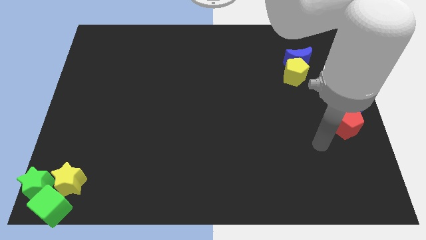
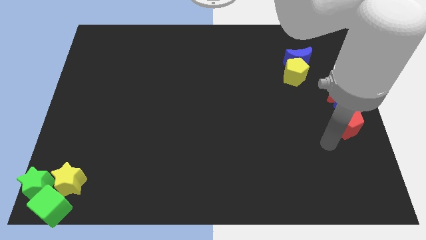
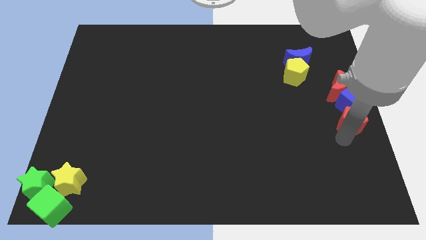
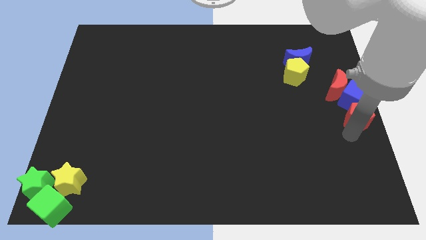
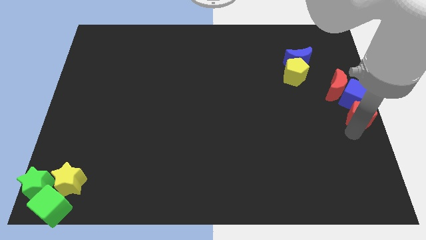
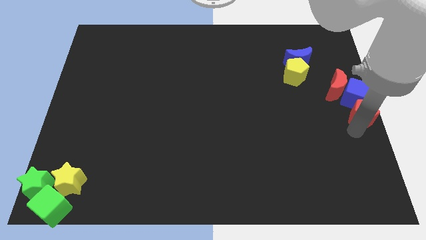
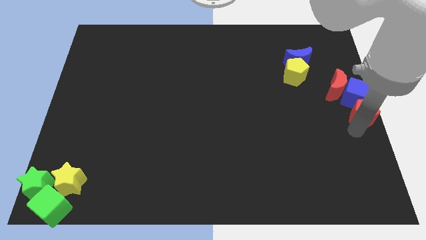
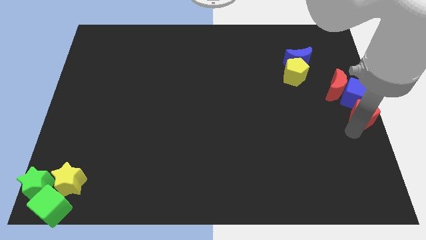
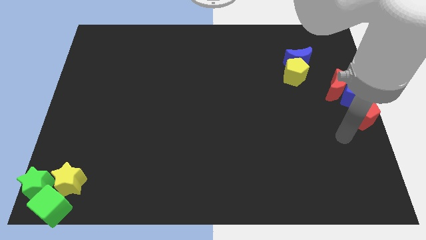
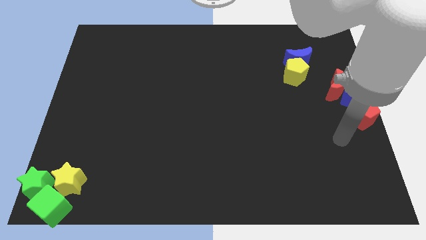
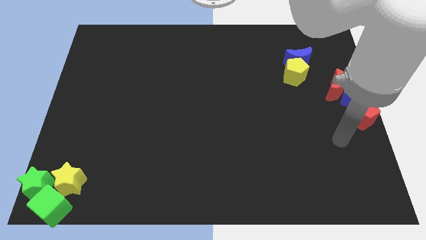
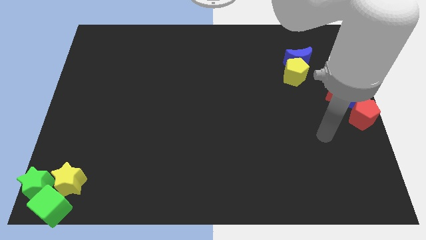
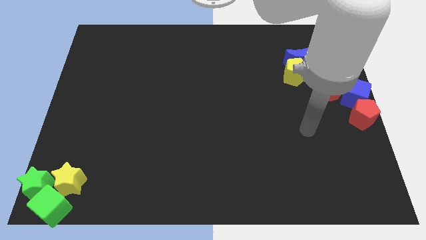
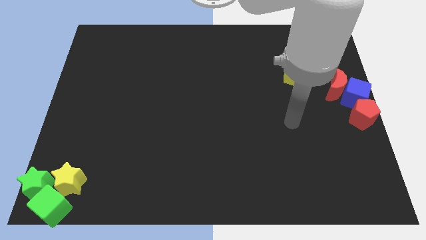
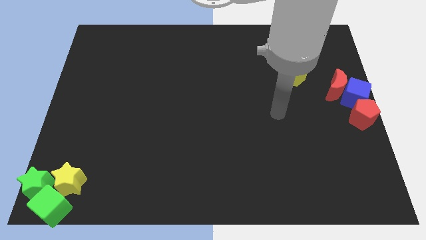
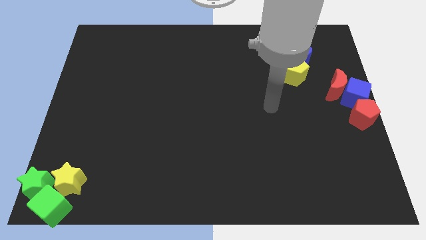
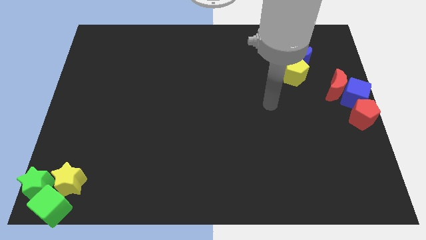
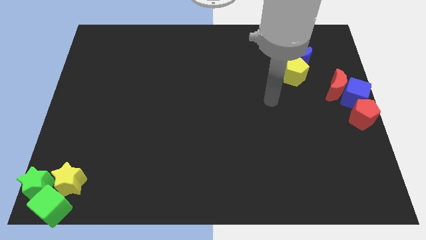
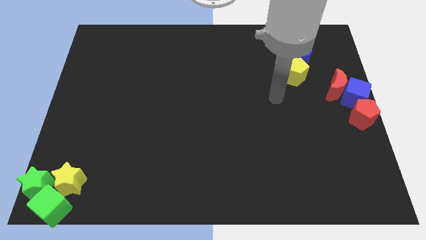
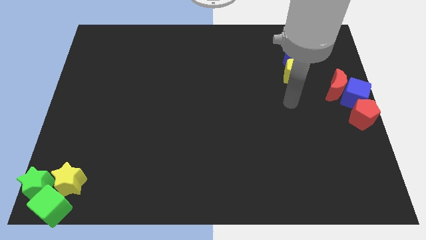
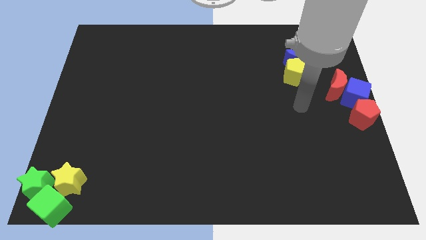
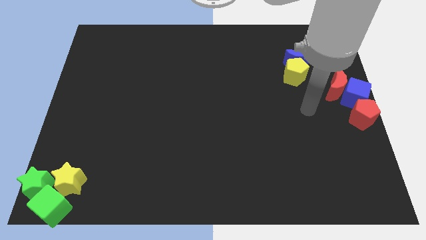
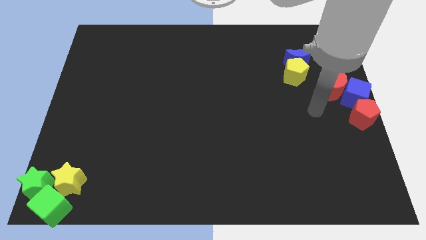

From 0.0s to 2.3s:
move the red pentagon to the bottom of the blue cube

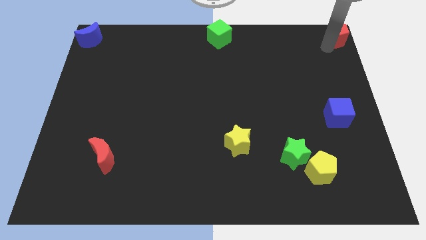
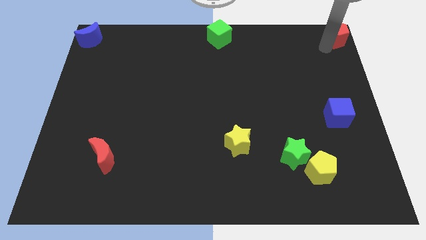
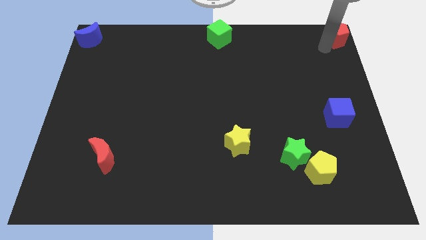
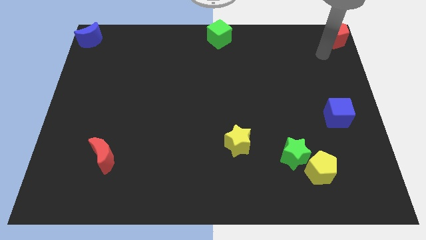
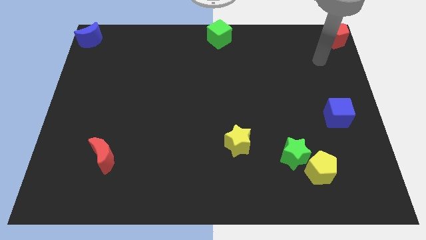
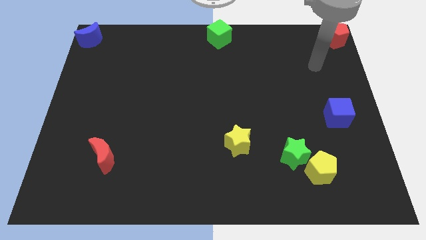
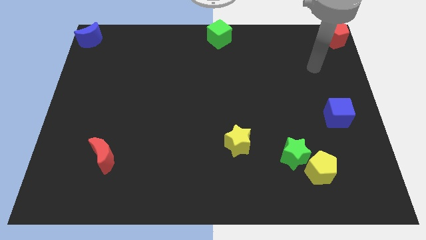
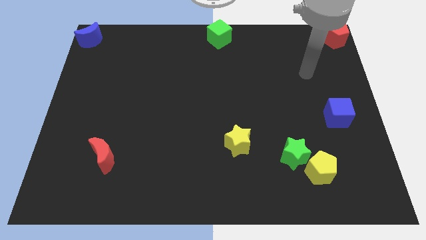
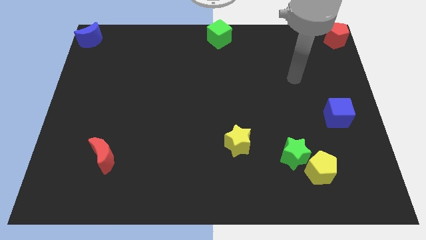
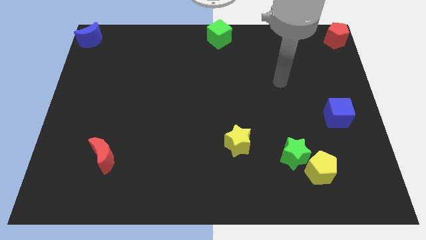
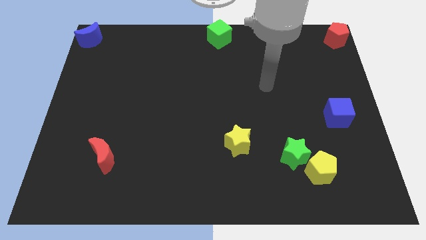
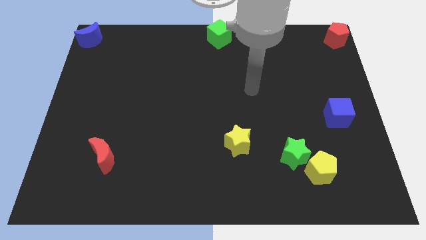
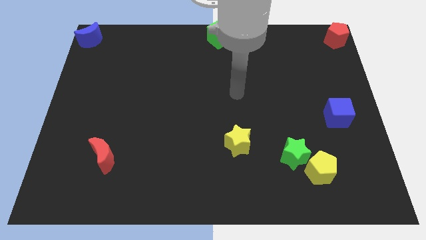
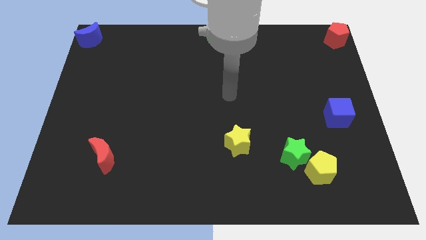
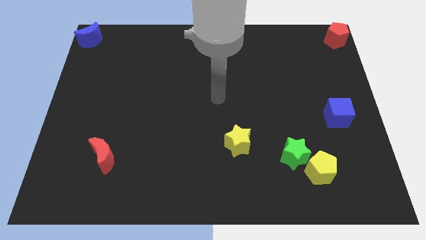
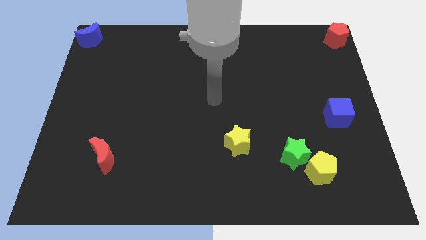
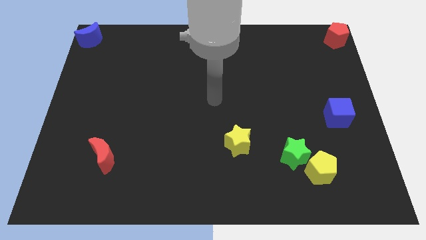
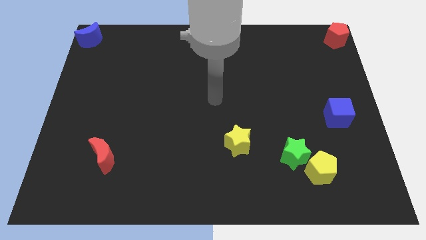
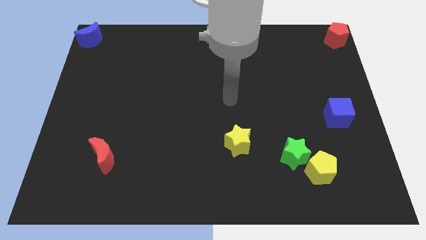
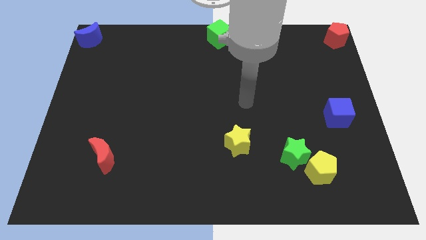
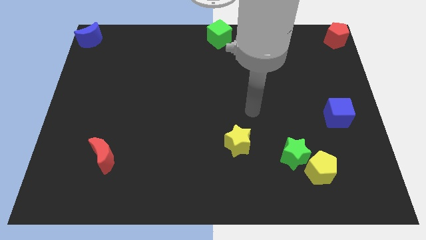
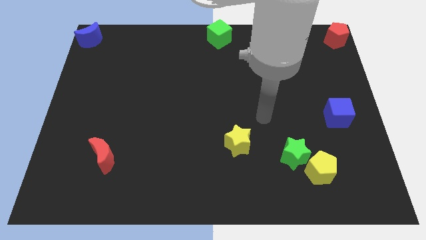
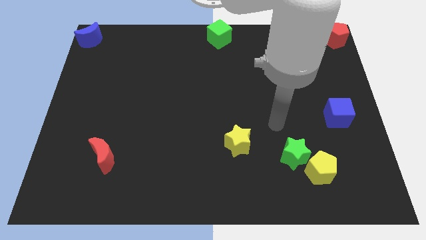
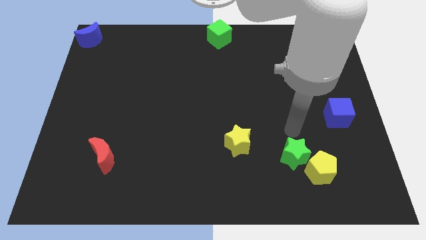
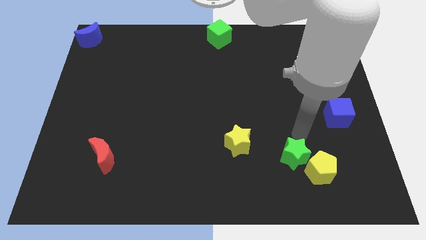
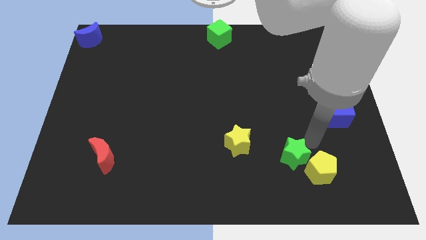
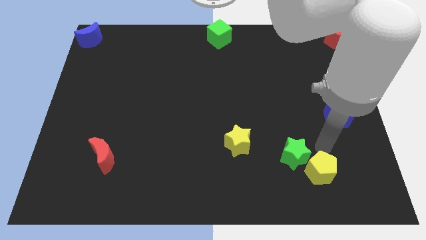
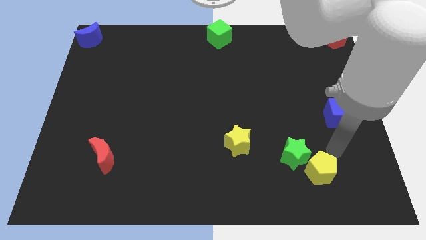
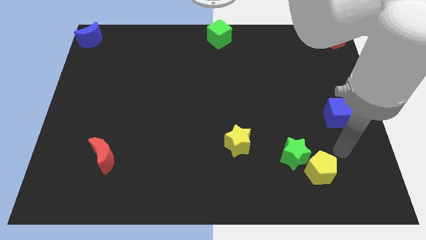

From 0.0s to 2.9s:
point your hand towards the top right of the yellow pentagon

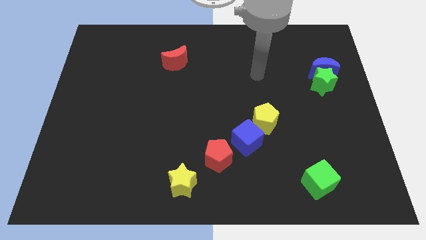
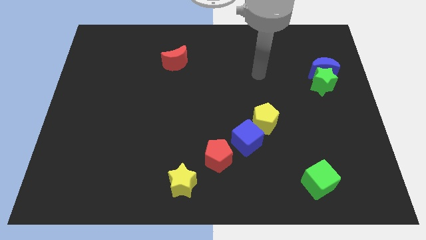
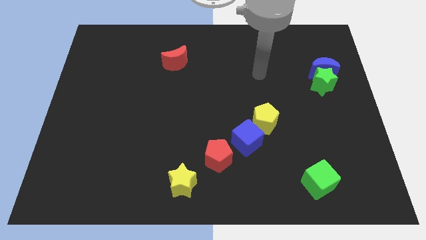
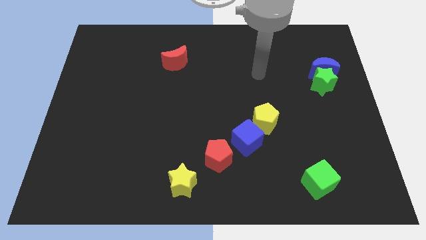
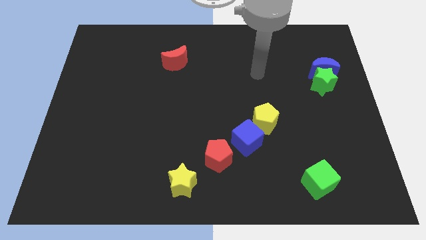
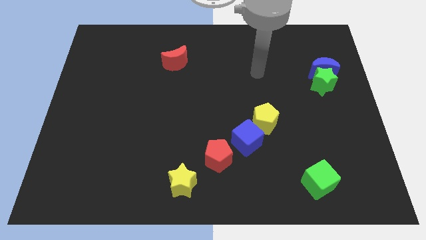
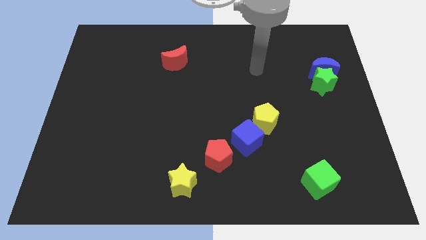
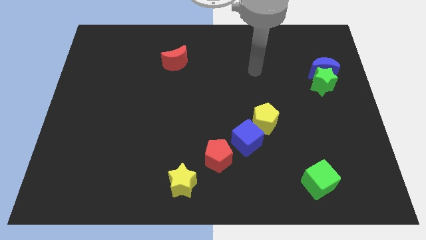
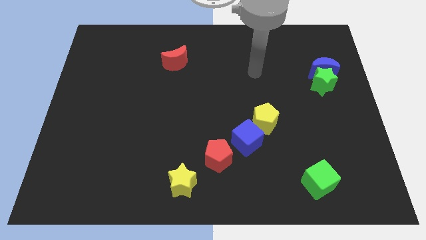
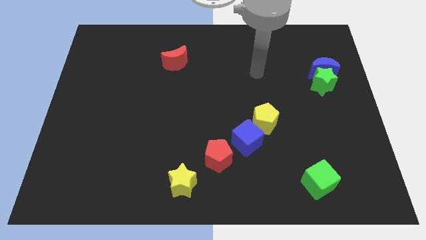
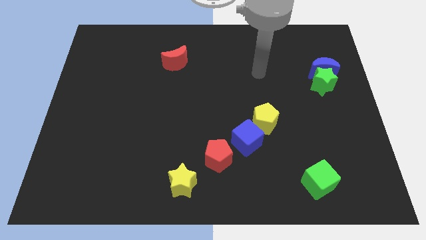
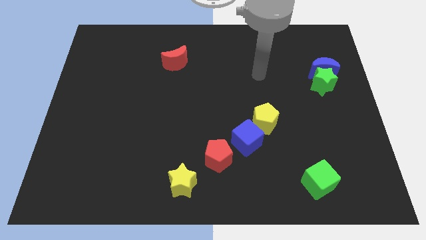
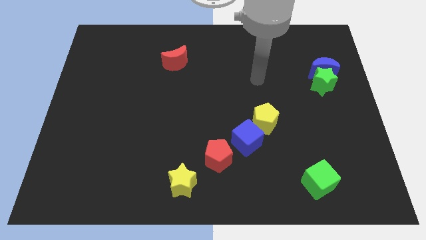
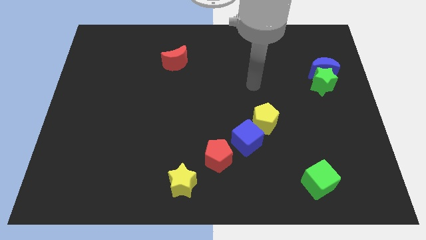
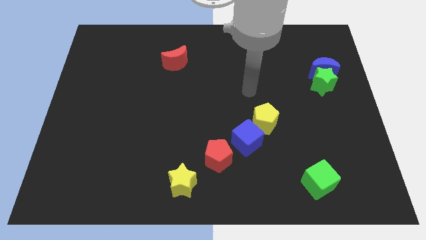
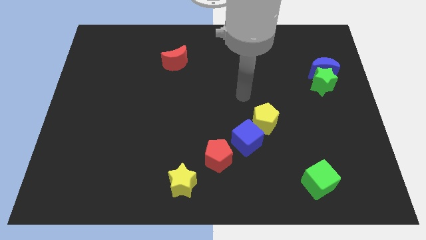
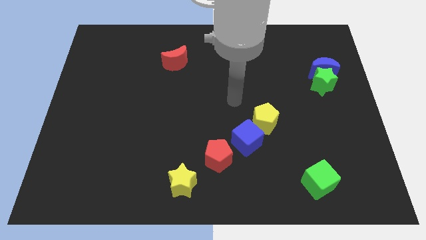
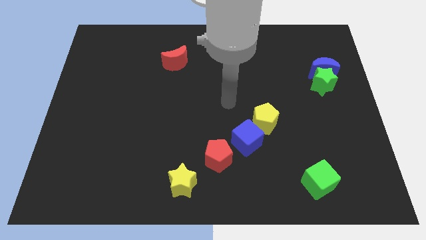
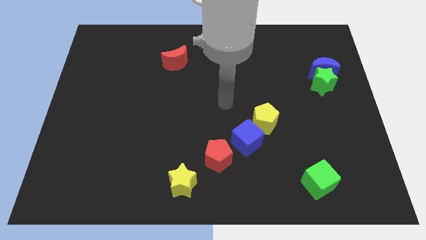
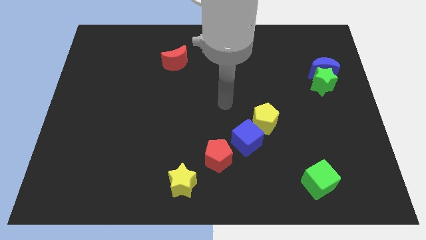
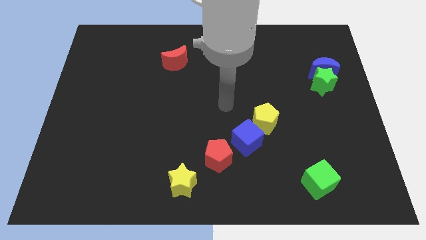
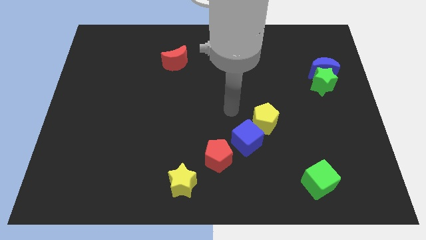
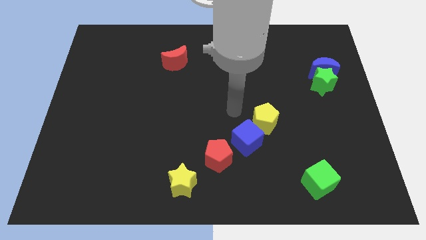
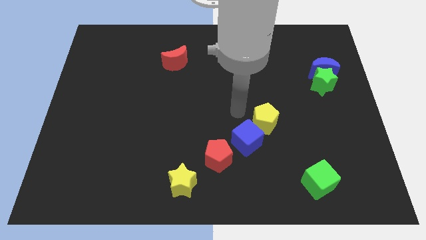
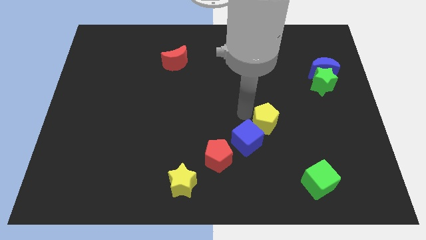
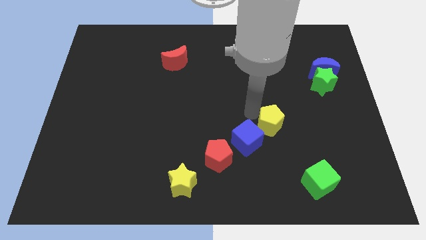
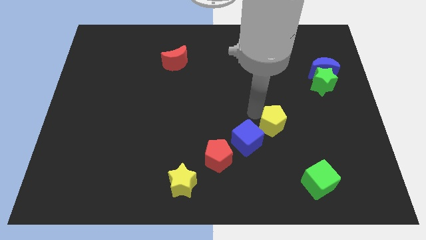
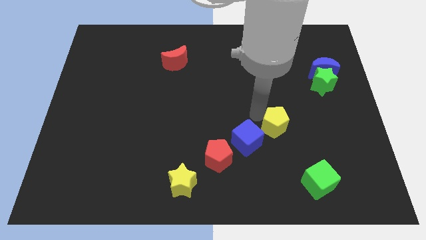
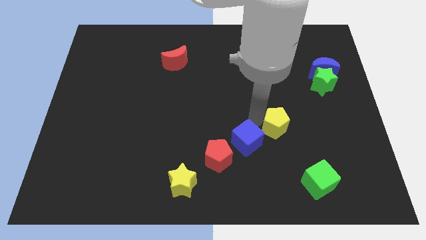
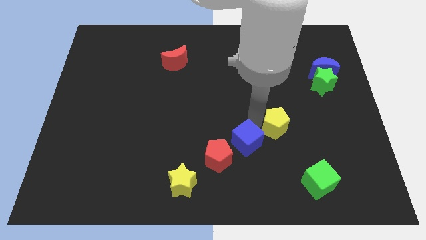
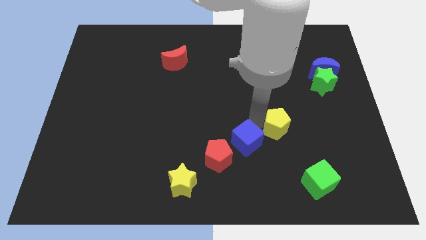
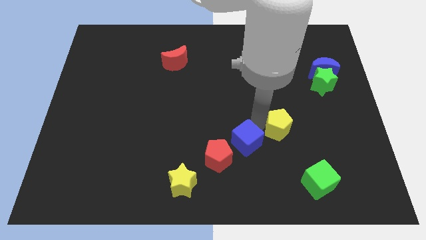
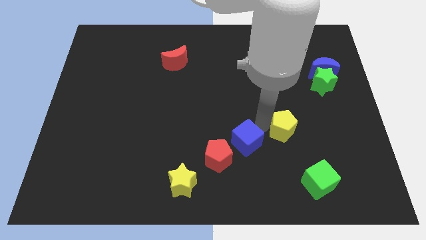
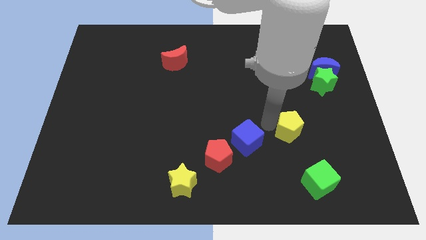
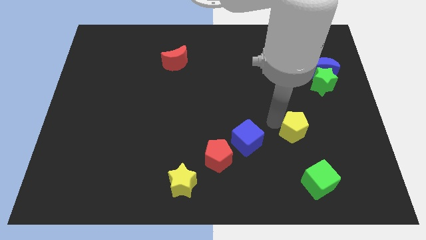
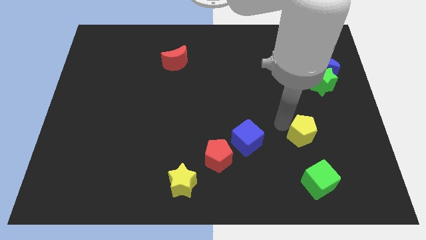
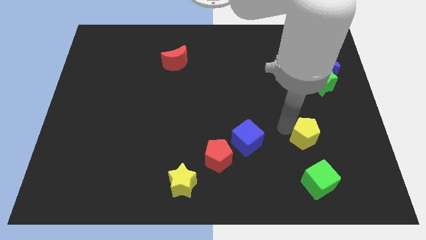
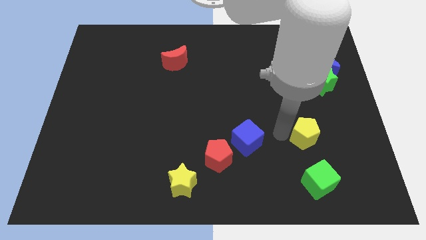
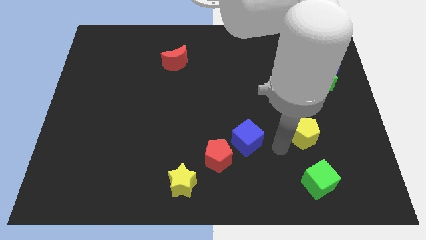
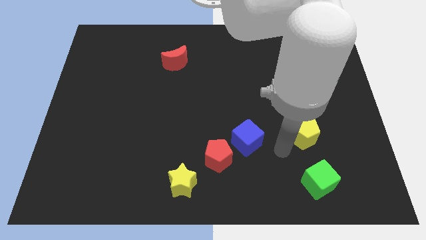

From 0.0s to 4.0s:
move the yellow pentagon to the bottom right of the board
